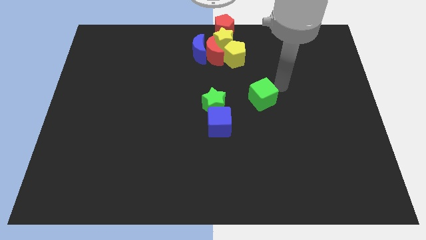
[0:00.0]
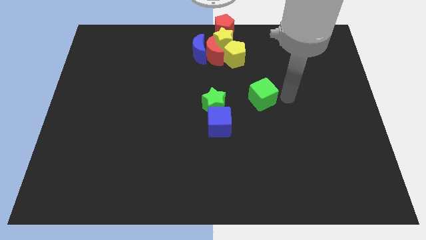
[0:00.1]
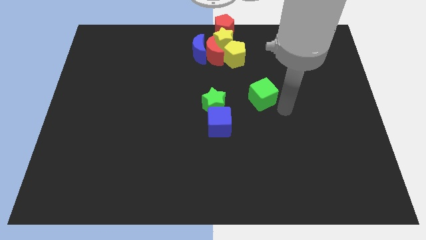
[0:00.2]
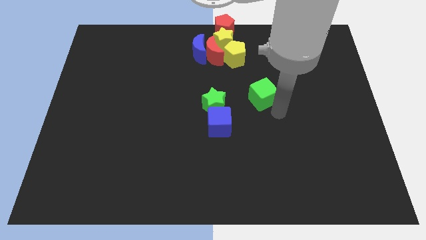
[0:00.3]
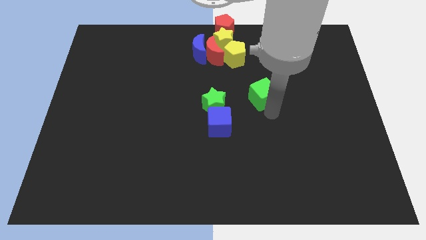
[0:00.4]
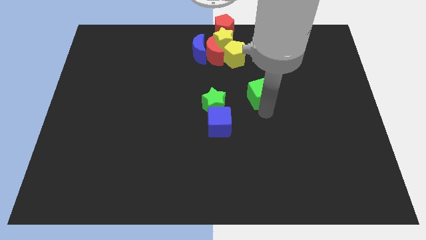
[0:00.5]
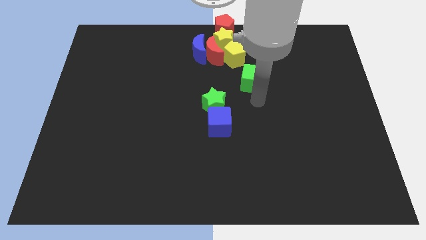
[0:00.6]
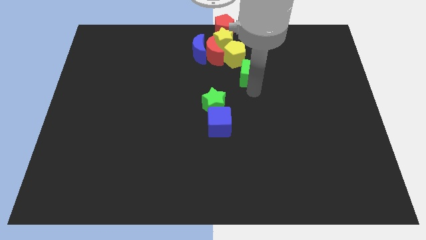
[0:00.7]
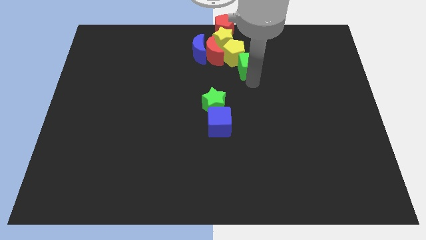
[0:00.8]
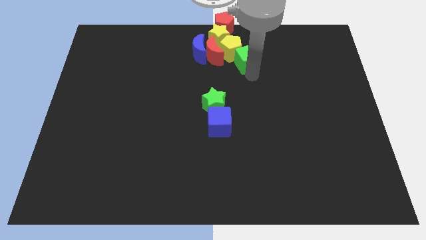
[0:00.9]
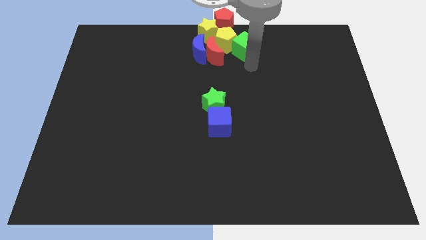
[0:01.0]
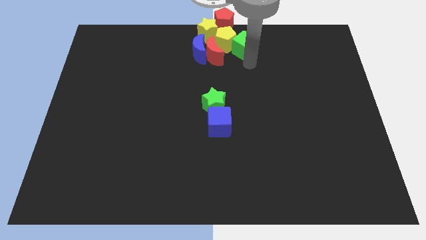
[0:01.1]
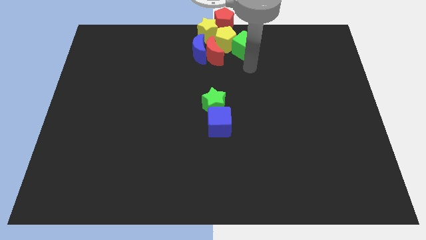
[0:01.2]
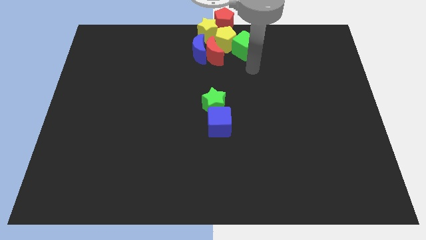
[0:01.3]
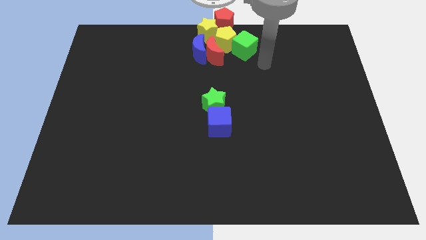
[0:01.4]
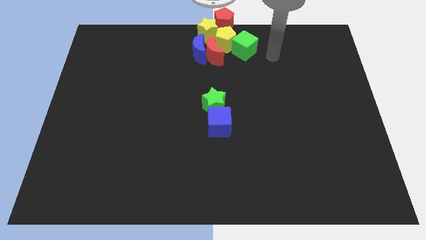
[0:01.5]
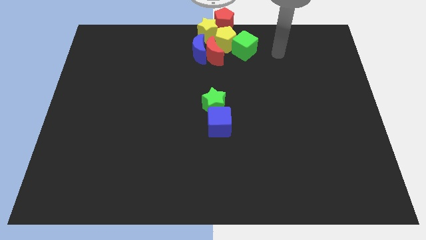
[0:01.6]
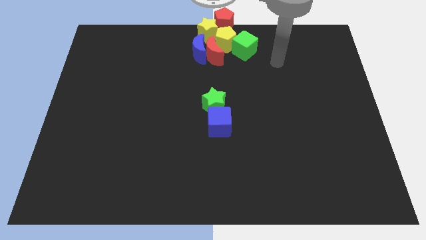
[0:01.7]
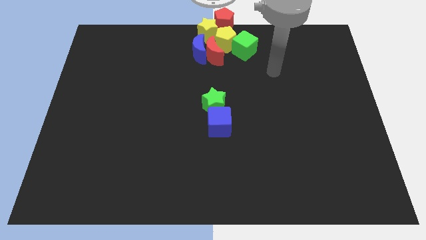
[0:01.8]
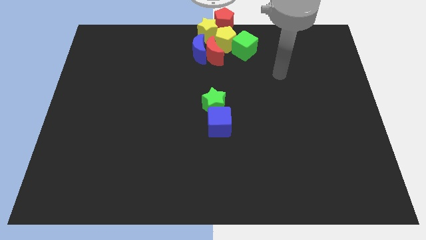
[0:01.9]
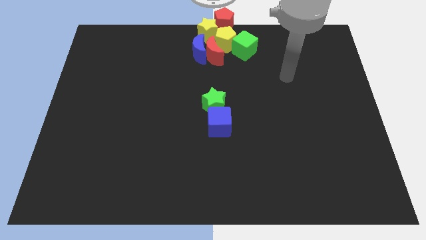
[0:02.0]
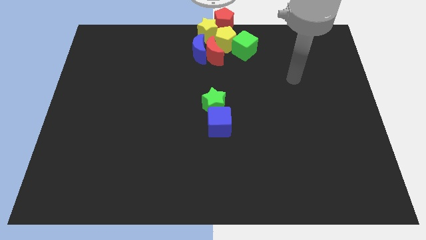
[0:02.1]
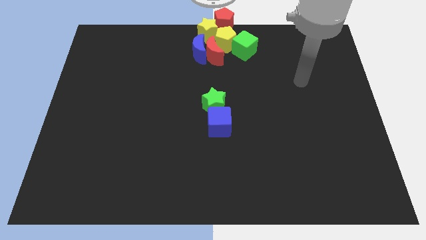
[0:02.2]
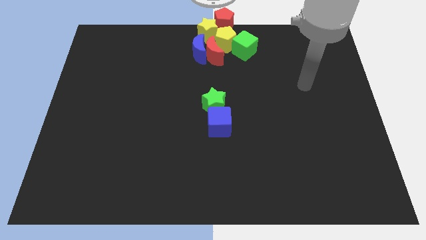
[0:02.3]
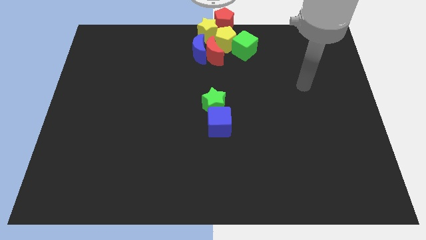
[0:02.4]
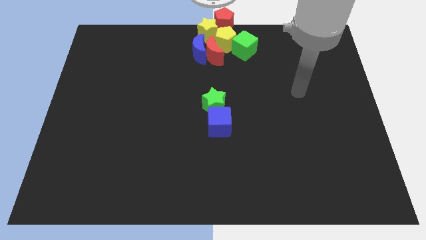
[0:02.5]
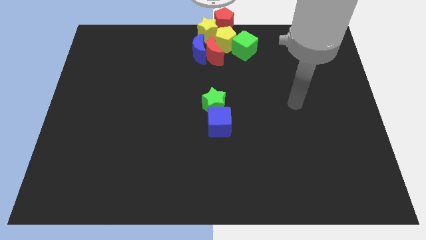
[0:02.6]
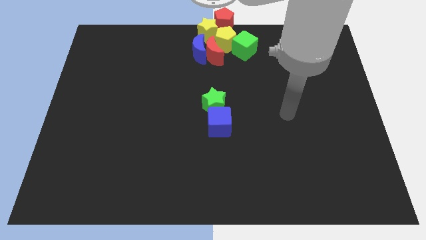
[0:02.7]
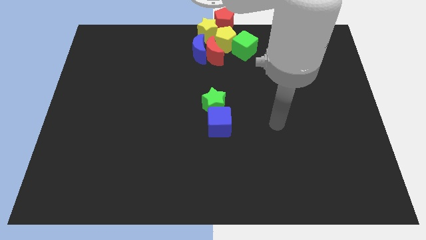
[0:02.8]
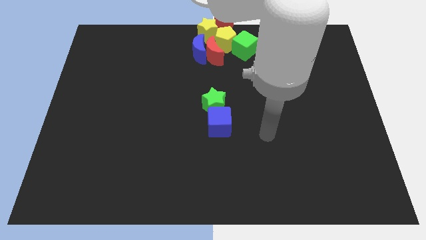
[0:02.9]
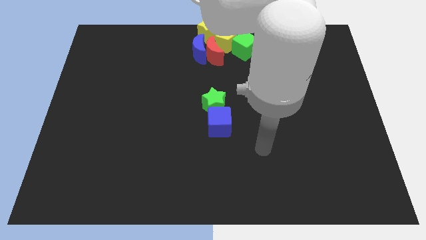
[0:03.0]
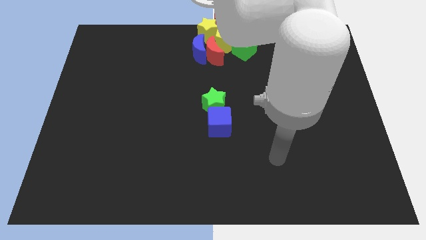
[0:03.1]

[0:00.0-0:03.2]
move the green cube into the yellow pentagon

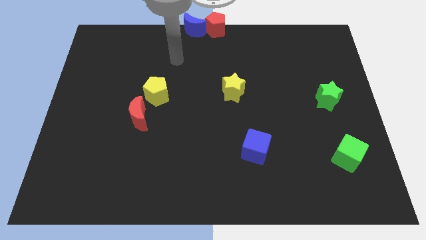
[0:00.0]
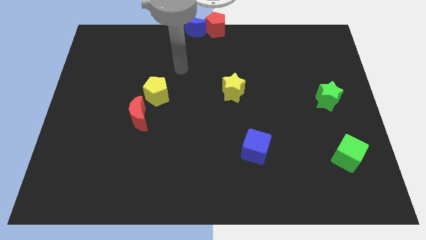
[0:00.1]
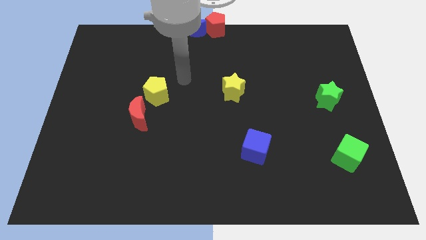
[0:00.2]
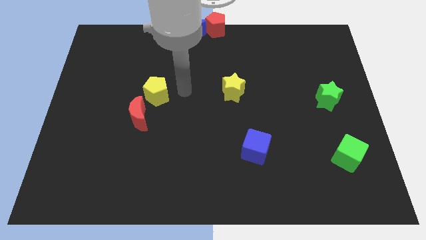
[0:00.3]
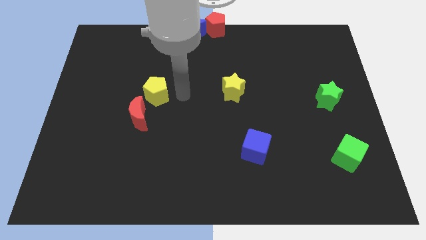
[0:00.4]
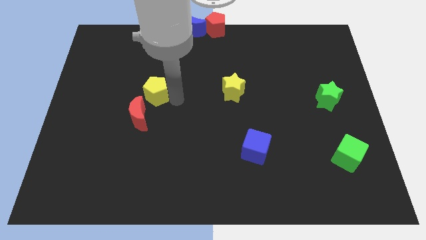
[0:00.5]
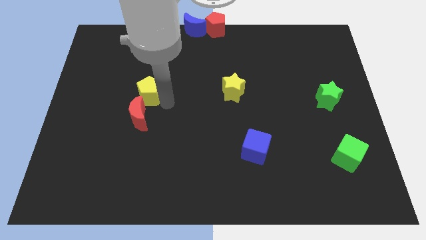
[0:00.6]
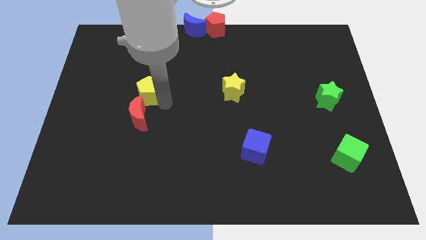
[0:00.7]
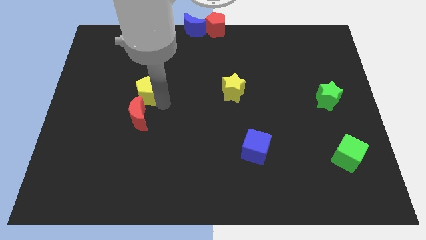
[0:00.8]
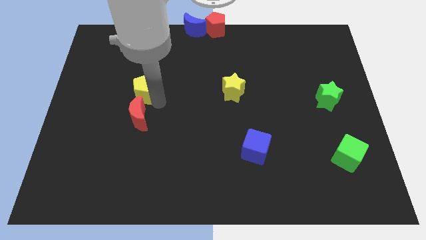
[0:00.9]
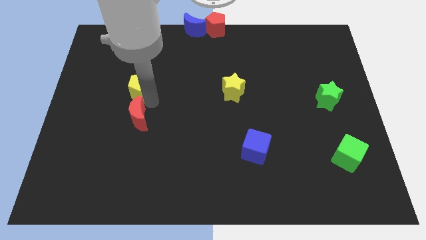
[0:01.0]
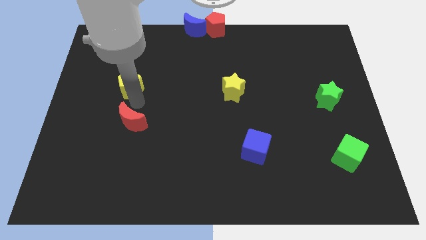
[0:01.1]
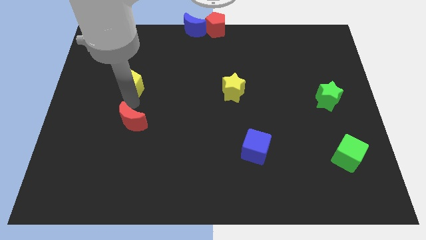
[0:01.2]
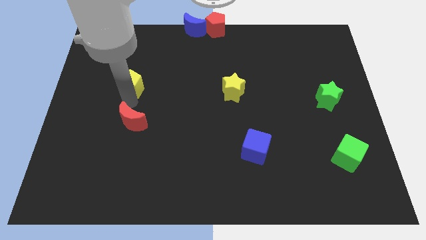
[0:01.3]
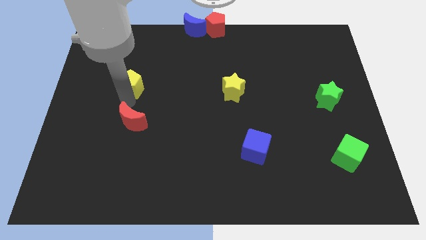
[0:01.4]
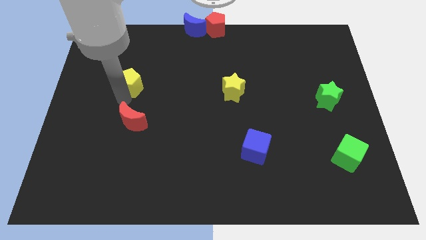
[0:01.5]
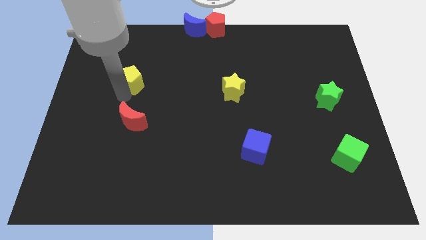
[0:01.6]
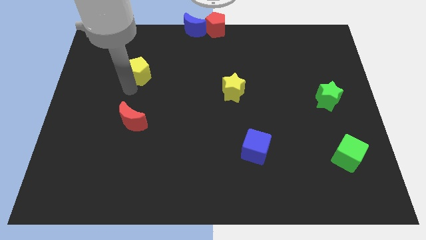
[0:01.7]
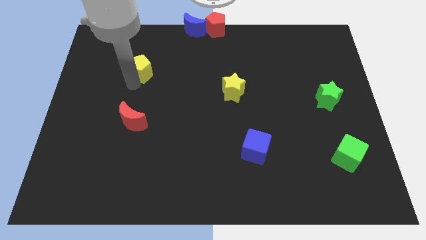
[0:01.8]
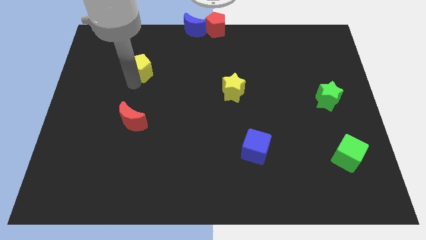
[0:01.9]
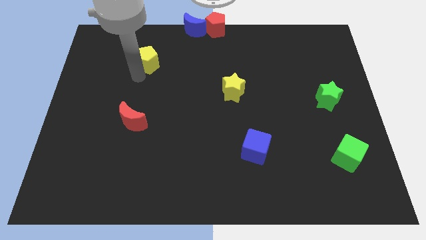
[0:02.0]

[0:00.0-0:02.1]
separate the yellow pentagon from the red moon

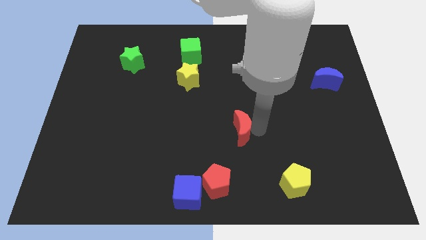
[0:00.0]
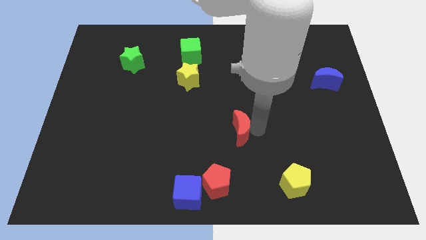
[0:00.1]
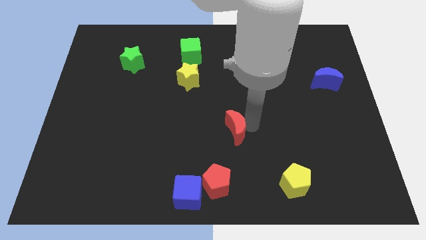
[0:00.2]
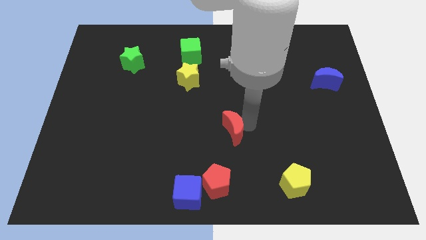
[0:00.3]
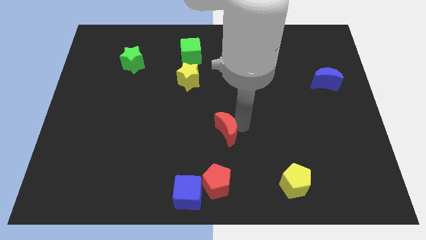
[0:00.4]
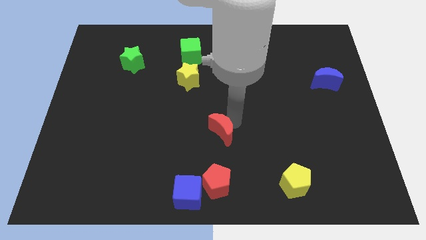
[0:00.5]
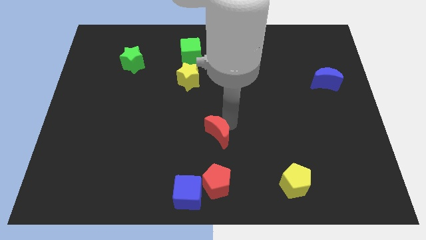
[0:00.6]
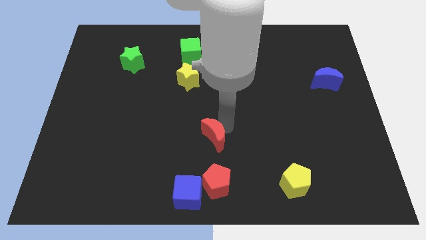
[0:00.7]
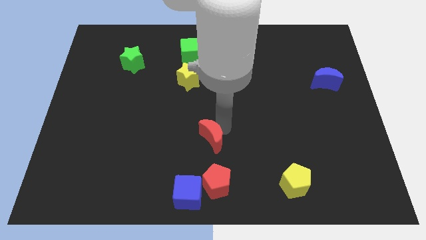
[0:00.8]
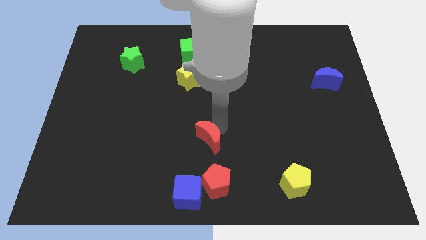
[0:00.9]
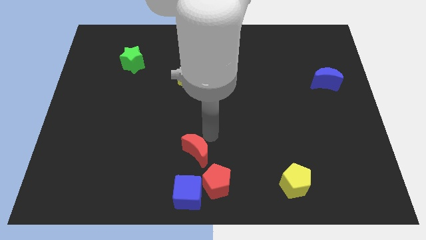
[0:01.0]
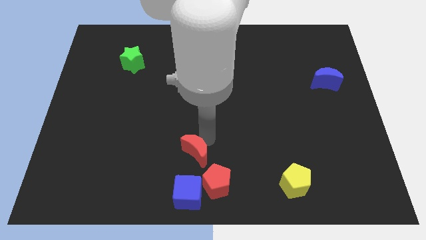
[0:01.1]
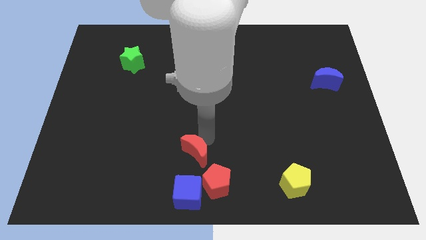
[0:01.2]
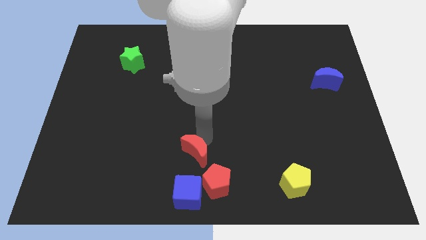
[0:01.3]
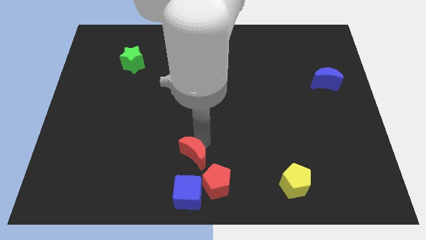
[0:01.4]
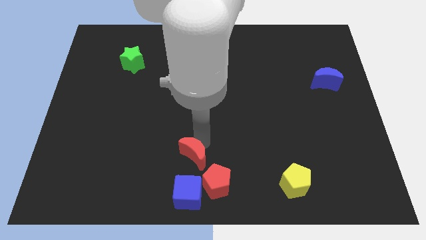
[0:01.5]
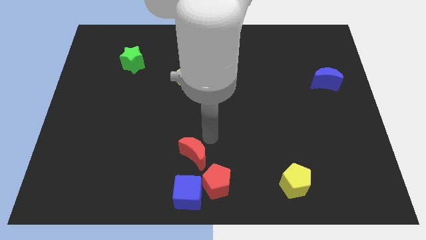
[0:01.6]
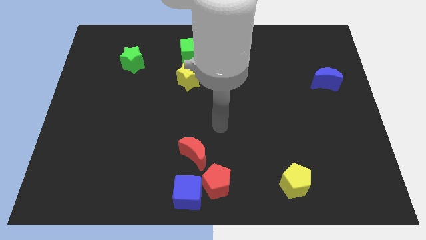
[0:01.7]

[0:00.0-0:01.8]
push the red crescent to the top of the blue cube

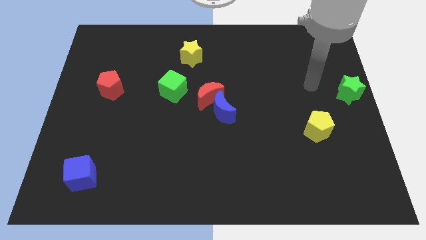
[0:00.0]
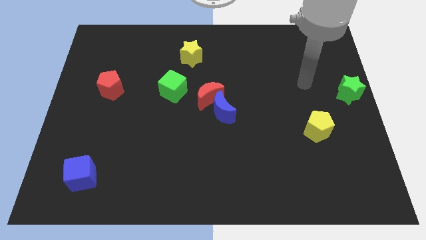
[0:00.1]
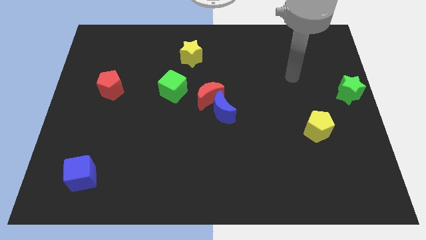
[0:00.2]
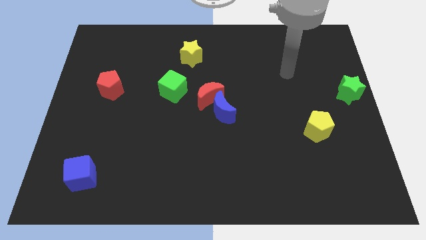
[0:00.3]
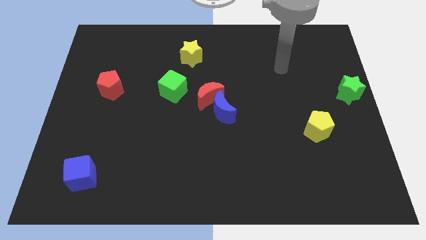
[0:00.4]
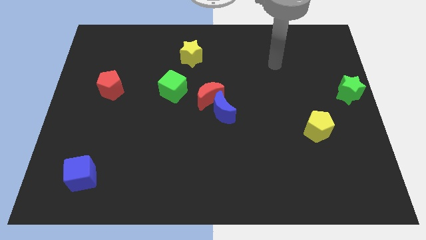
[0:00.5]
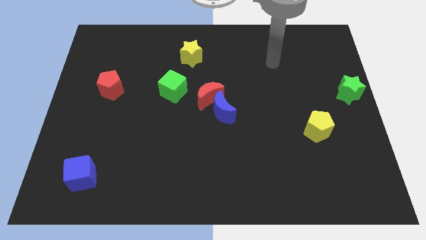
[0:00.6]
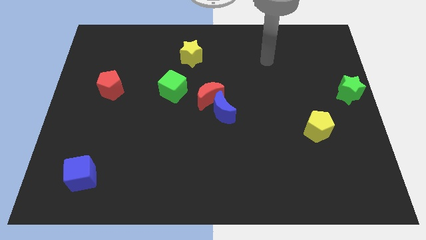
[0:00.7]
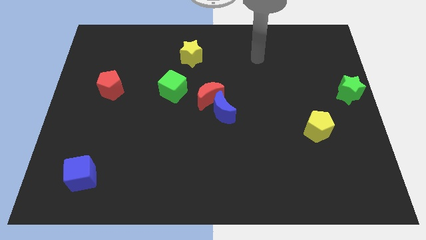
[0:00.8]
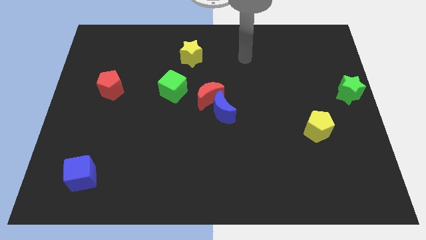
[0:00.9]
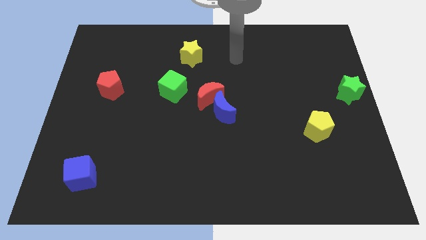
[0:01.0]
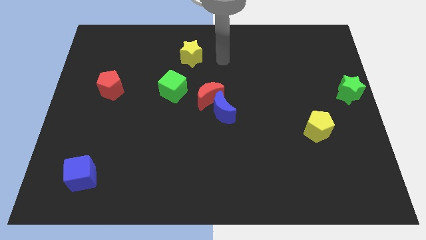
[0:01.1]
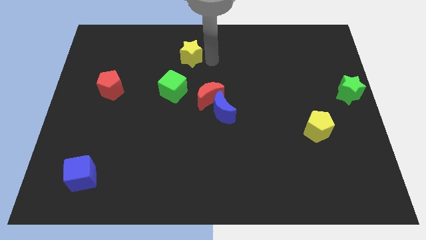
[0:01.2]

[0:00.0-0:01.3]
place your arm to the right side of the yellow star

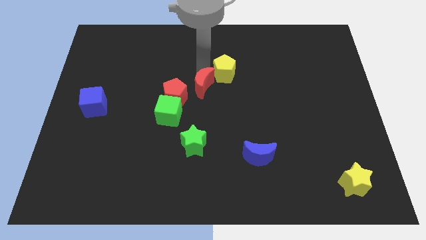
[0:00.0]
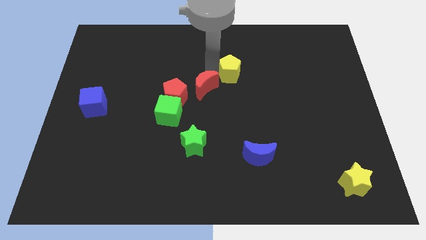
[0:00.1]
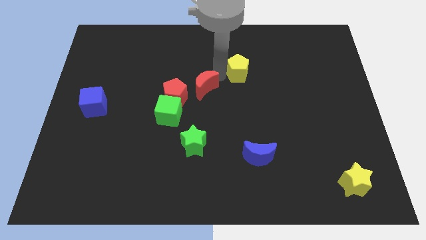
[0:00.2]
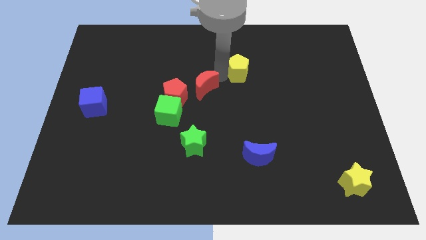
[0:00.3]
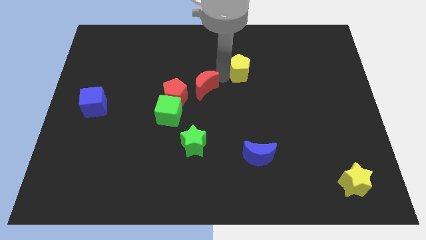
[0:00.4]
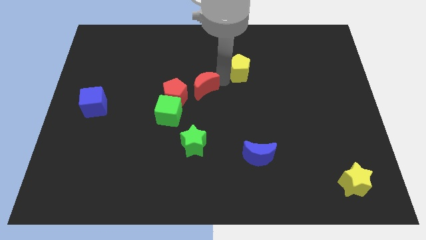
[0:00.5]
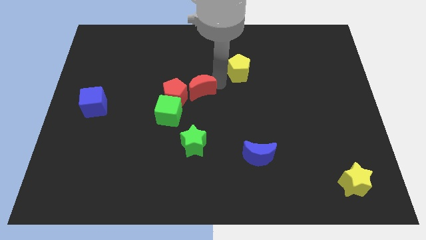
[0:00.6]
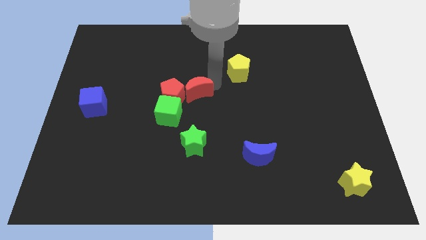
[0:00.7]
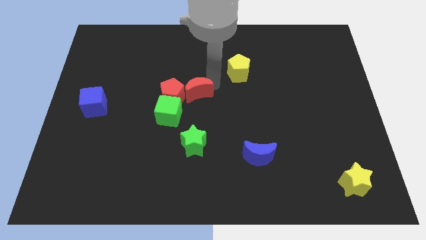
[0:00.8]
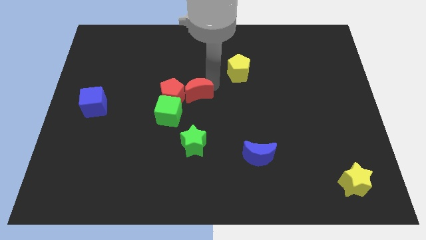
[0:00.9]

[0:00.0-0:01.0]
place the red crescent into red penatgon
